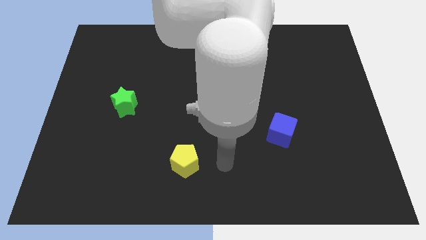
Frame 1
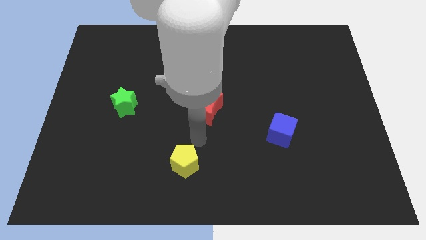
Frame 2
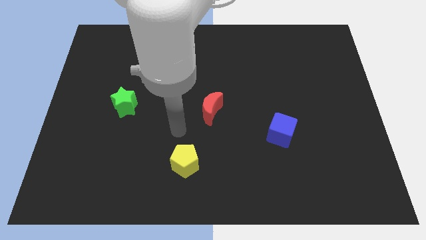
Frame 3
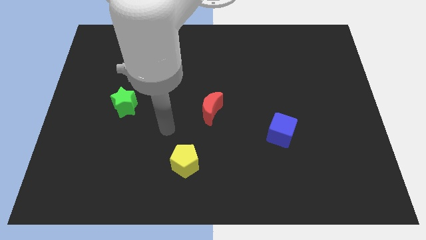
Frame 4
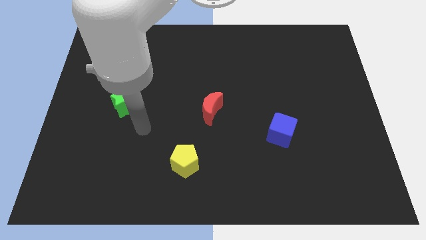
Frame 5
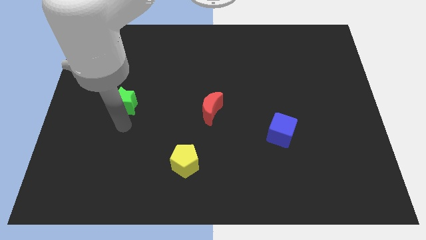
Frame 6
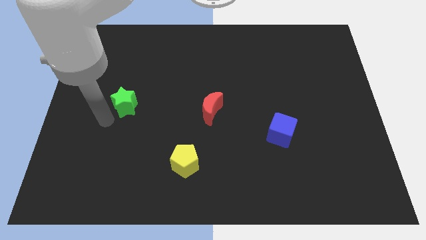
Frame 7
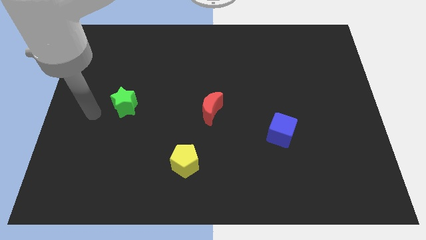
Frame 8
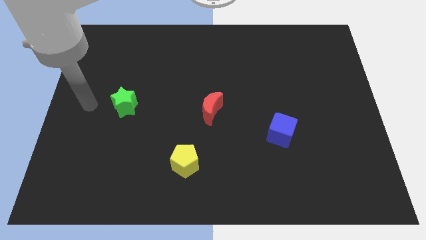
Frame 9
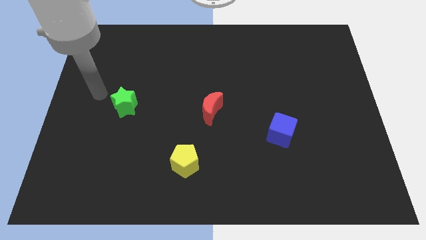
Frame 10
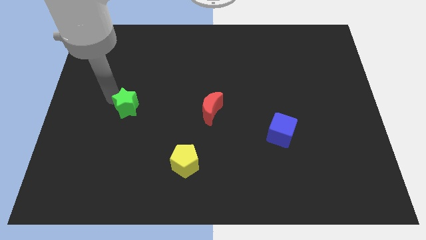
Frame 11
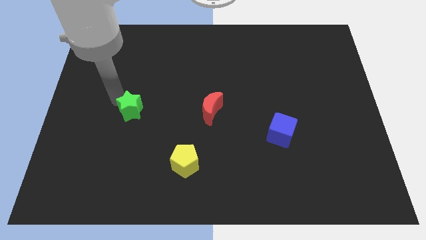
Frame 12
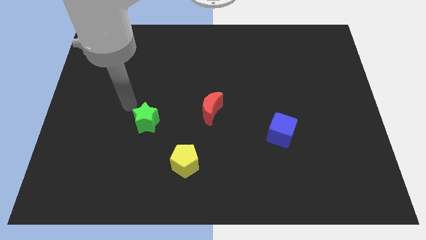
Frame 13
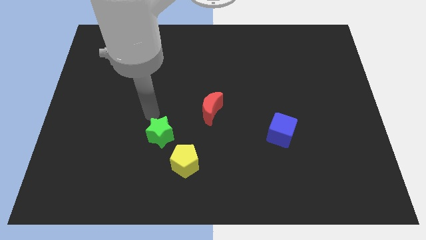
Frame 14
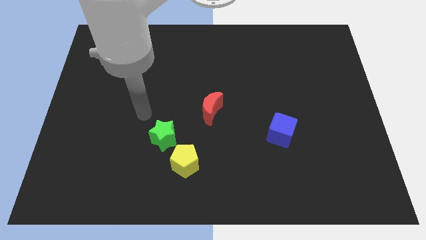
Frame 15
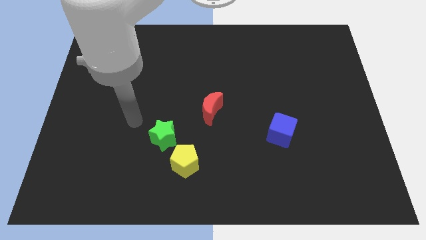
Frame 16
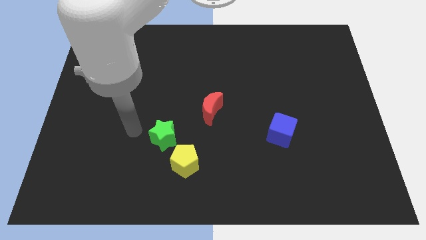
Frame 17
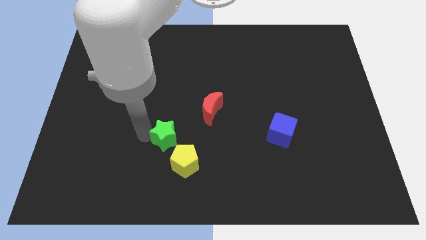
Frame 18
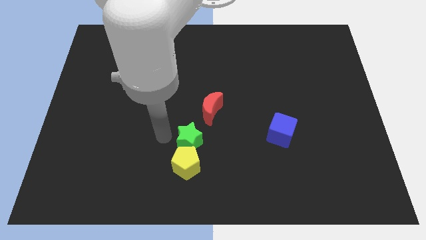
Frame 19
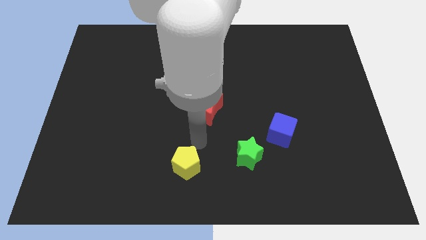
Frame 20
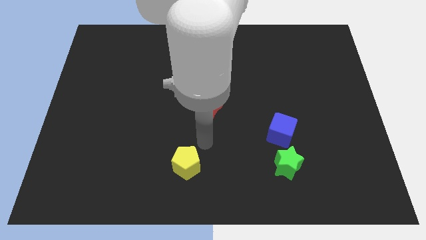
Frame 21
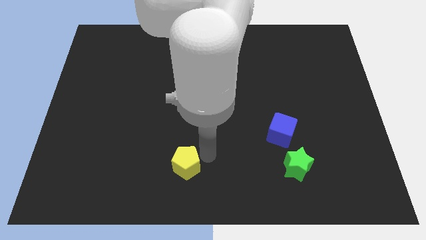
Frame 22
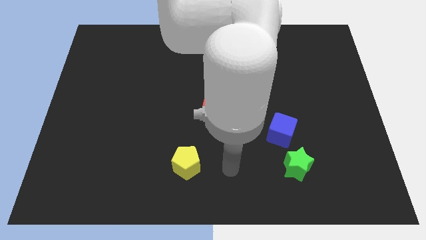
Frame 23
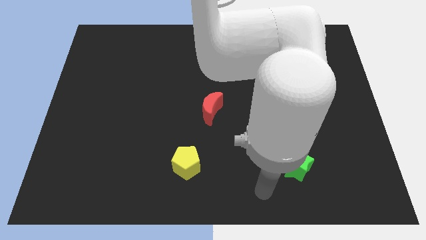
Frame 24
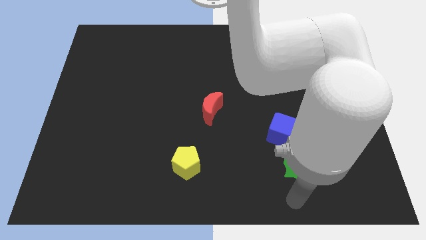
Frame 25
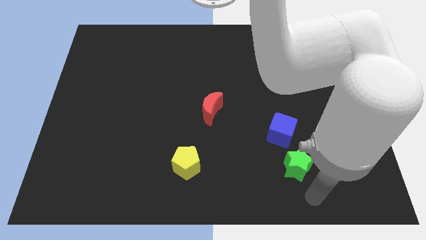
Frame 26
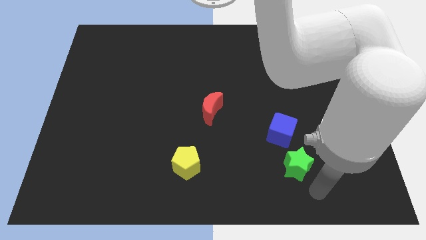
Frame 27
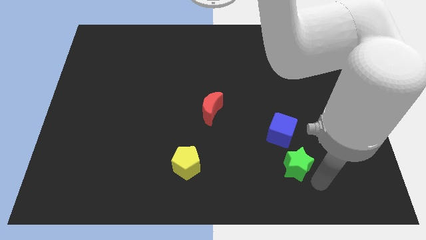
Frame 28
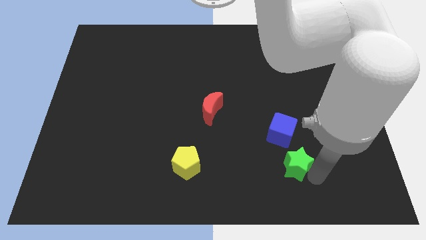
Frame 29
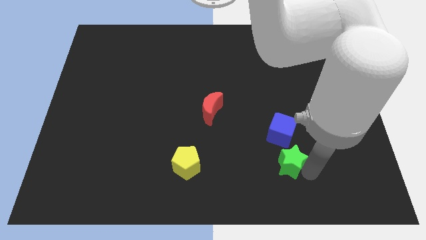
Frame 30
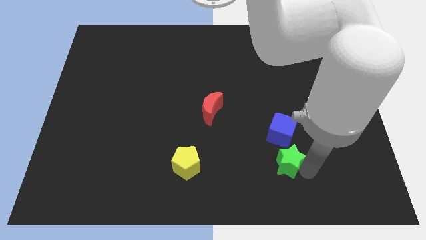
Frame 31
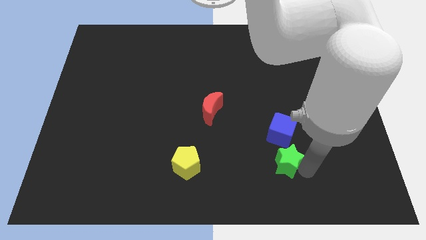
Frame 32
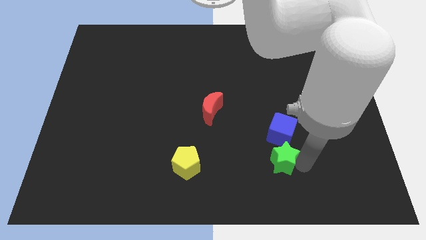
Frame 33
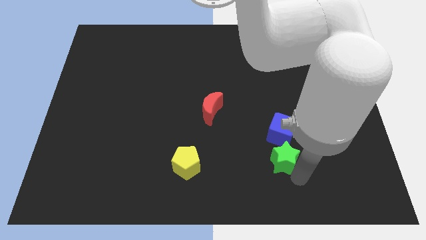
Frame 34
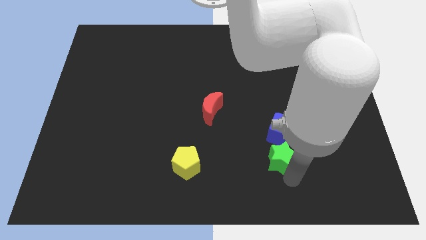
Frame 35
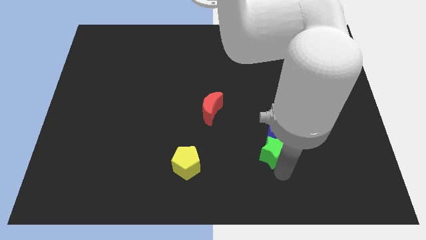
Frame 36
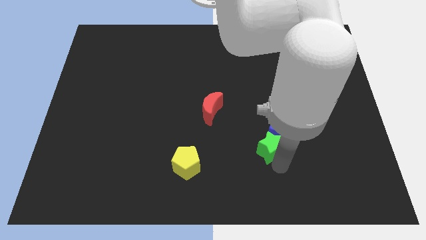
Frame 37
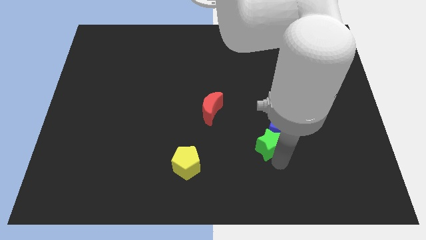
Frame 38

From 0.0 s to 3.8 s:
slide the star next to the cube

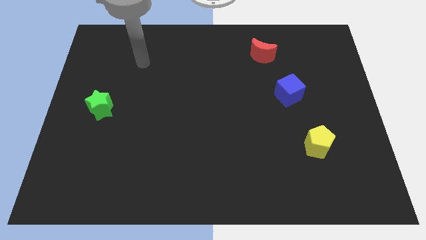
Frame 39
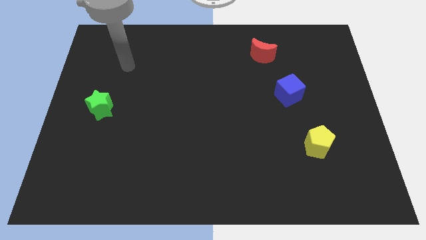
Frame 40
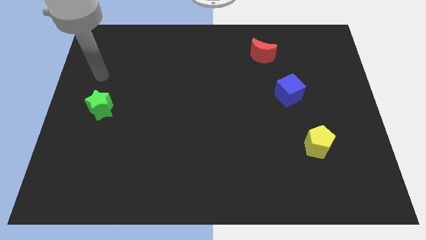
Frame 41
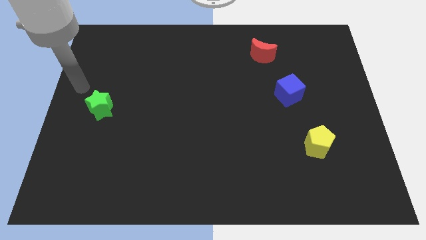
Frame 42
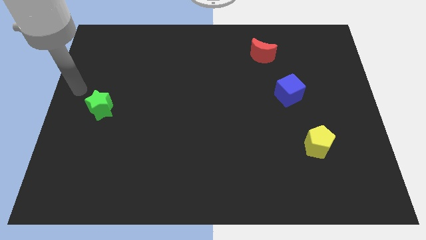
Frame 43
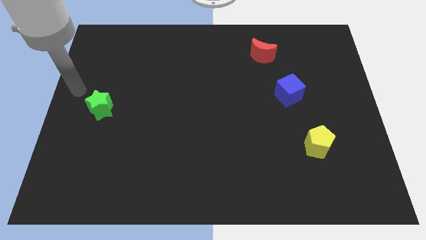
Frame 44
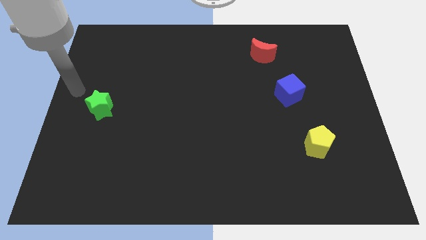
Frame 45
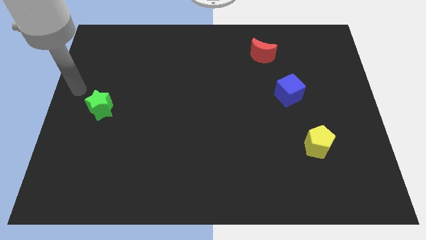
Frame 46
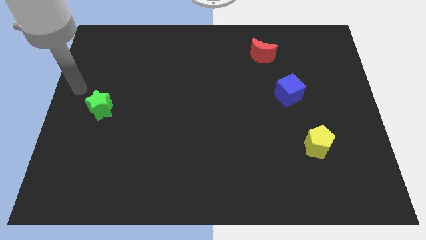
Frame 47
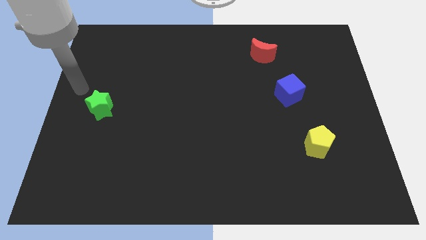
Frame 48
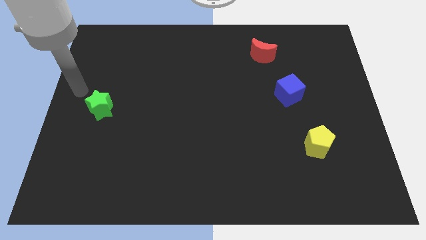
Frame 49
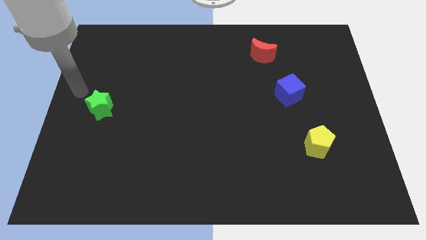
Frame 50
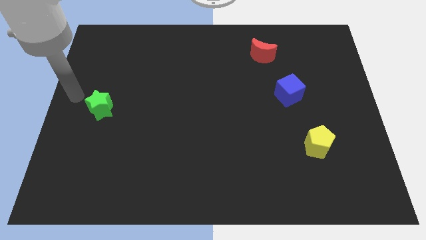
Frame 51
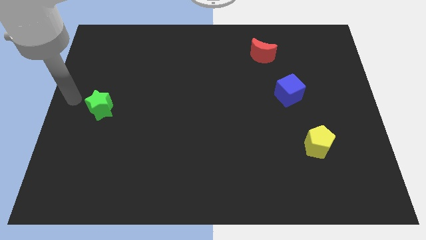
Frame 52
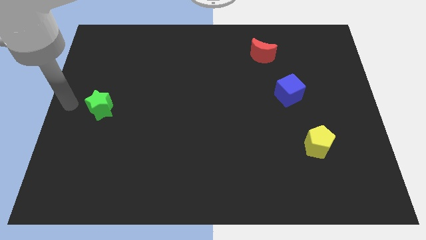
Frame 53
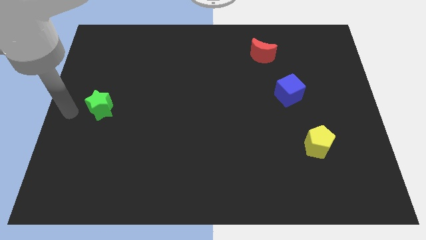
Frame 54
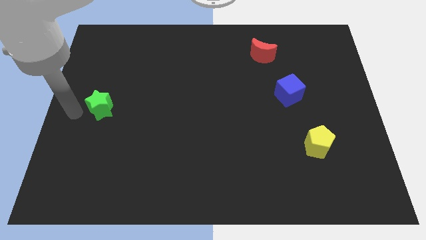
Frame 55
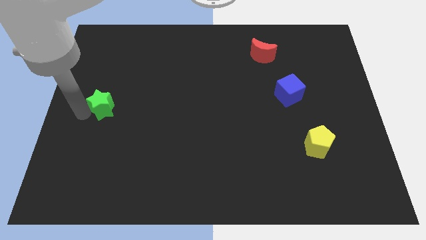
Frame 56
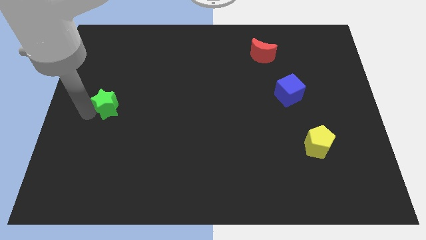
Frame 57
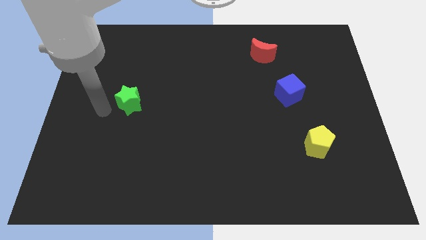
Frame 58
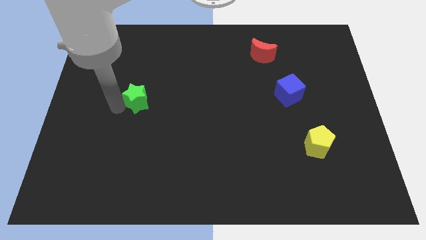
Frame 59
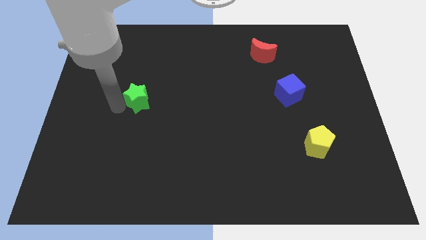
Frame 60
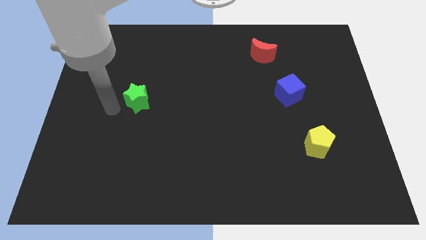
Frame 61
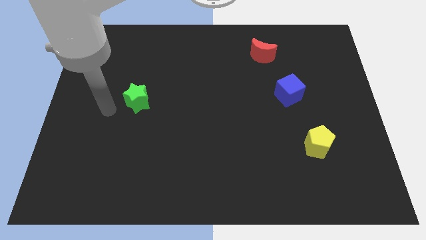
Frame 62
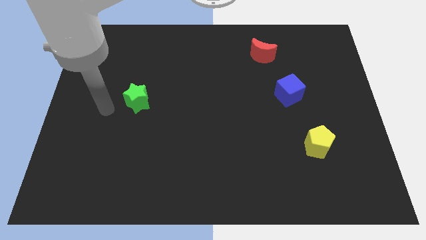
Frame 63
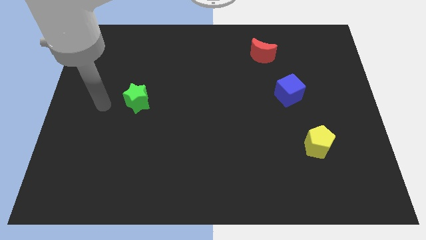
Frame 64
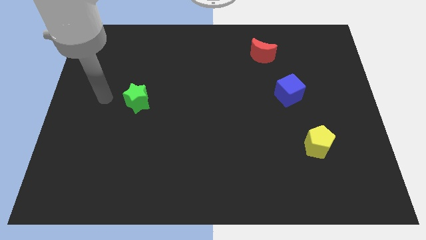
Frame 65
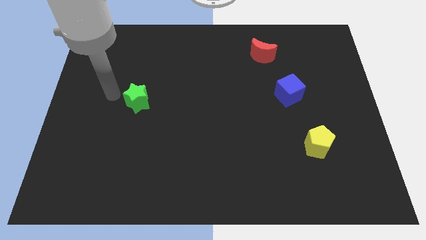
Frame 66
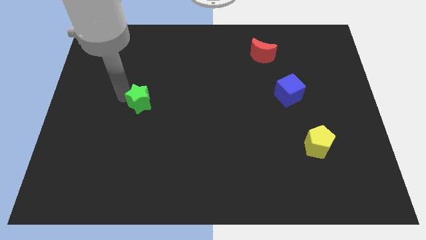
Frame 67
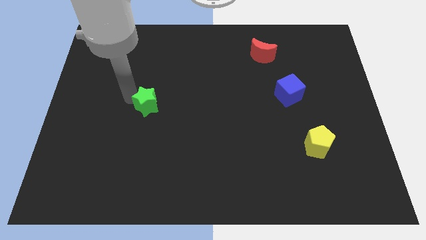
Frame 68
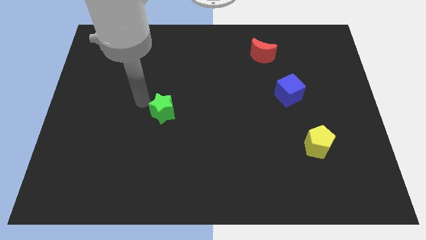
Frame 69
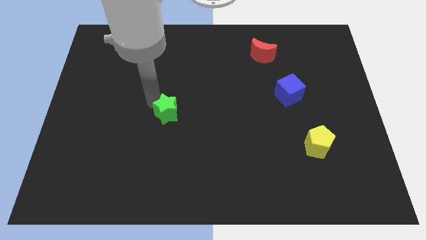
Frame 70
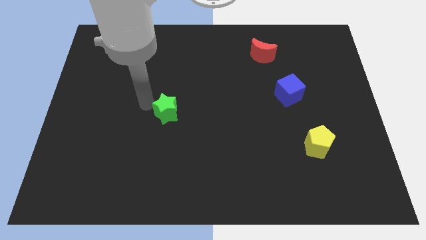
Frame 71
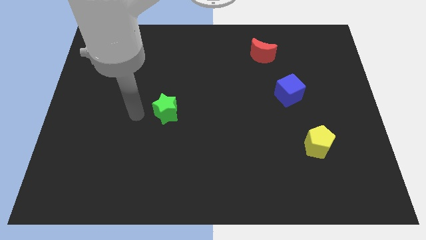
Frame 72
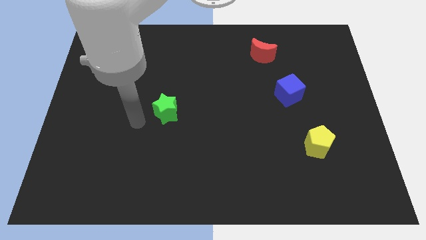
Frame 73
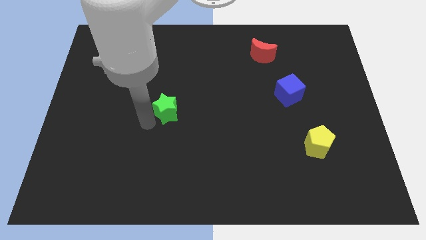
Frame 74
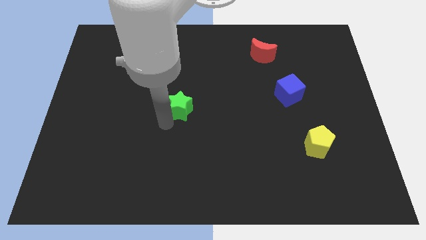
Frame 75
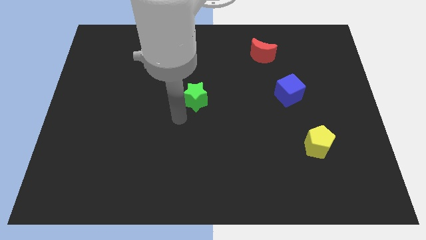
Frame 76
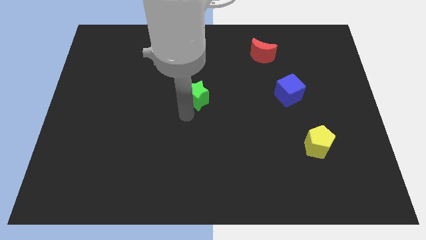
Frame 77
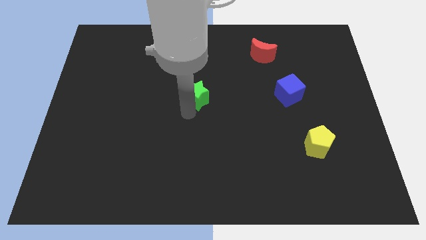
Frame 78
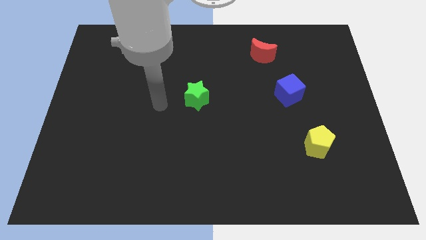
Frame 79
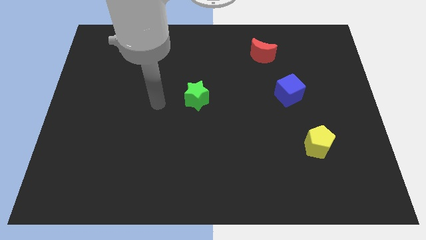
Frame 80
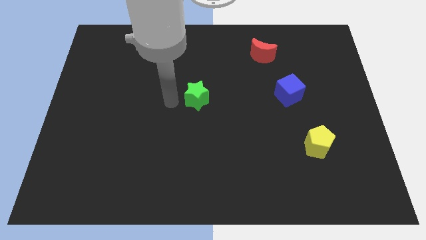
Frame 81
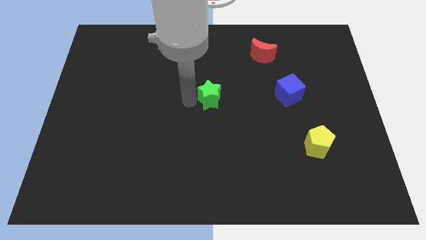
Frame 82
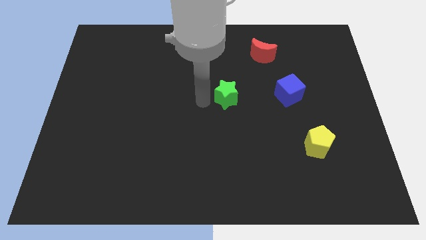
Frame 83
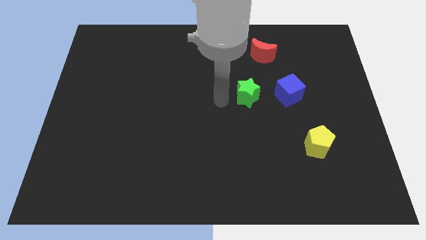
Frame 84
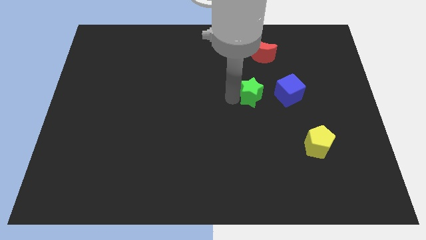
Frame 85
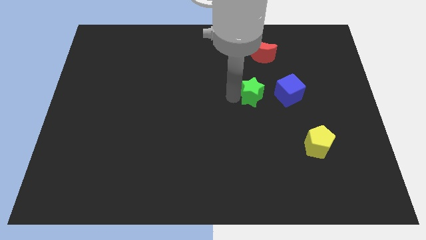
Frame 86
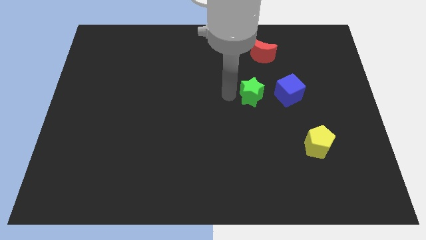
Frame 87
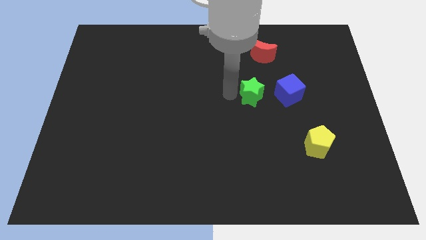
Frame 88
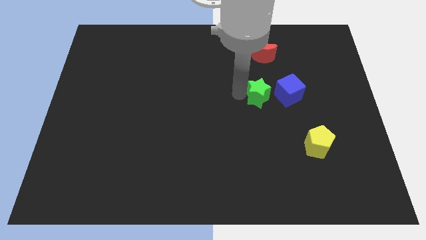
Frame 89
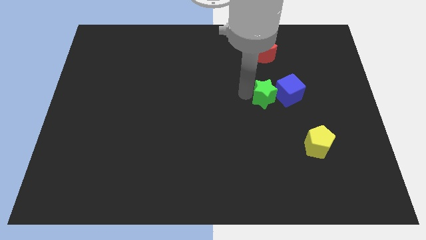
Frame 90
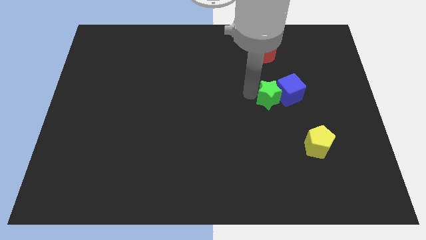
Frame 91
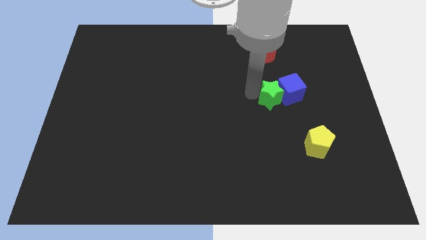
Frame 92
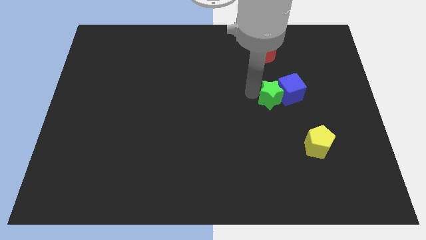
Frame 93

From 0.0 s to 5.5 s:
put the green star next to the blue block
